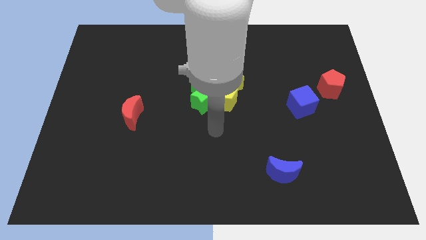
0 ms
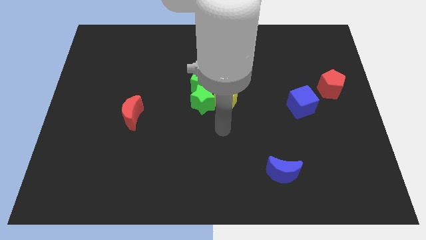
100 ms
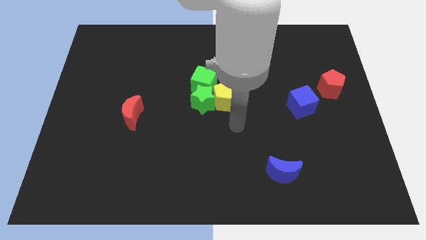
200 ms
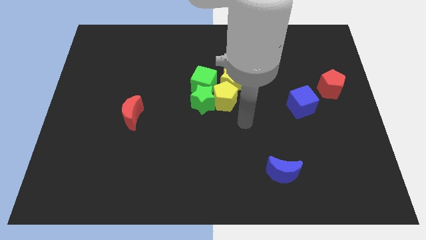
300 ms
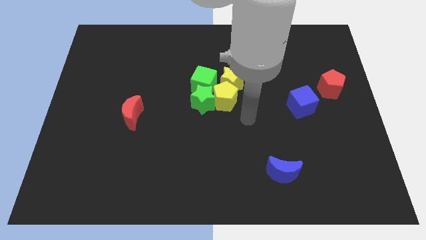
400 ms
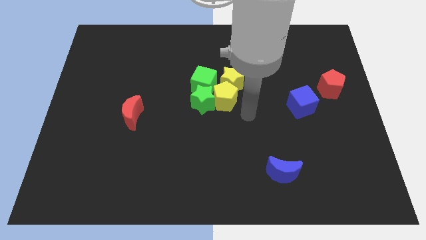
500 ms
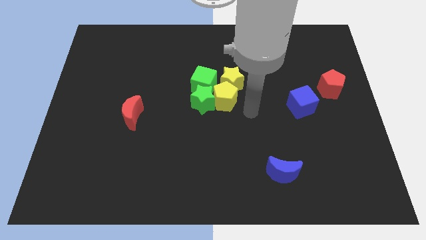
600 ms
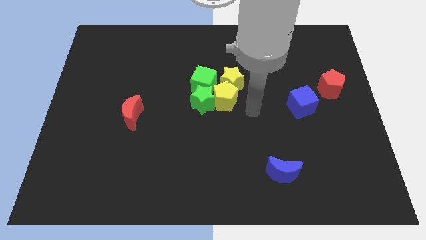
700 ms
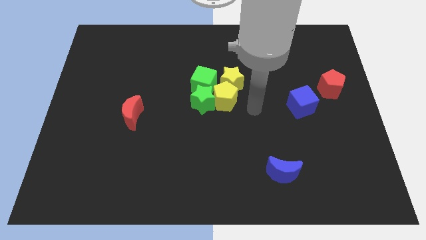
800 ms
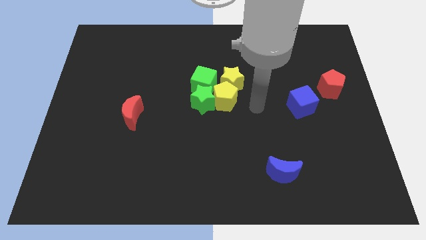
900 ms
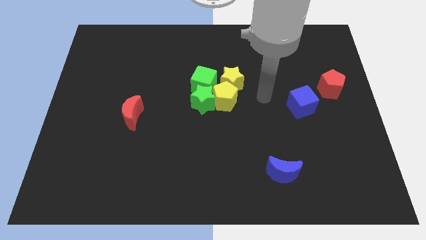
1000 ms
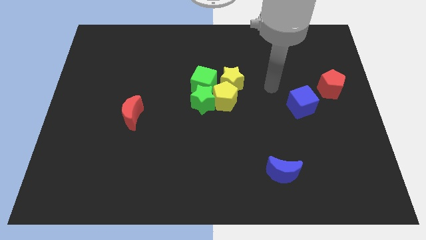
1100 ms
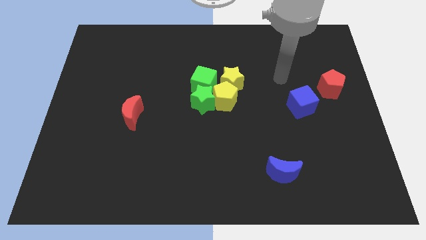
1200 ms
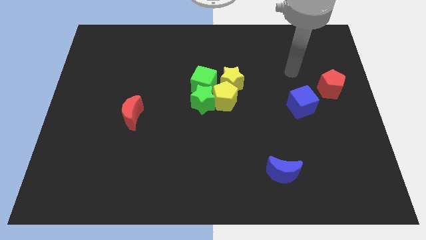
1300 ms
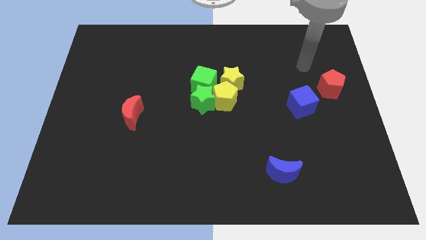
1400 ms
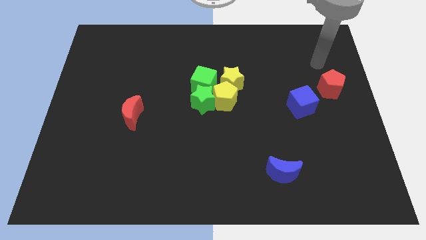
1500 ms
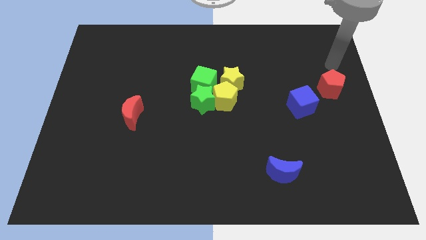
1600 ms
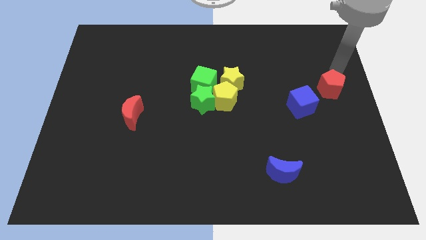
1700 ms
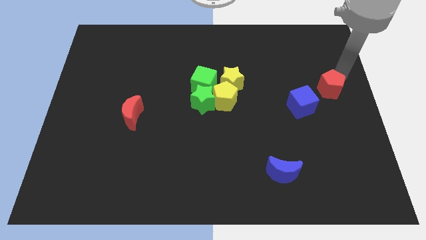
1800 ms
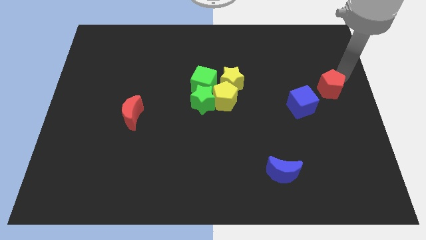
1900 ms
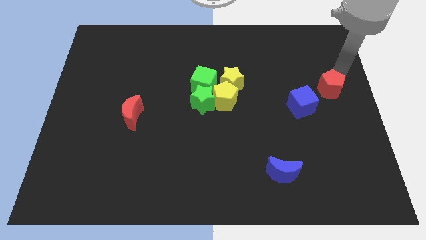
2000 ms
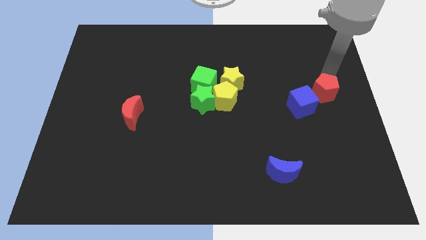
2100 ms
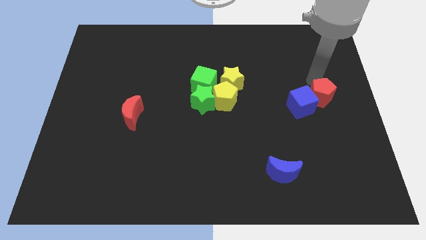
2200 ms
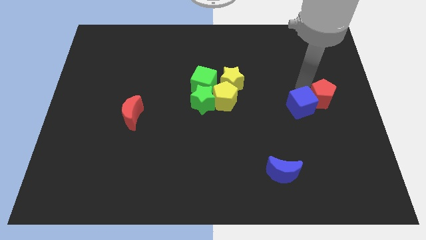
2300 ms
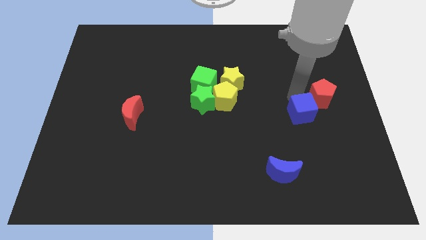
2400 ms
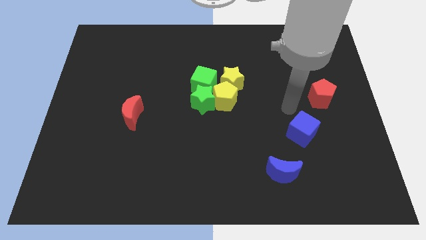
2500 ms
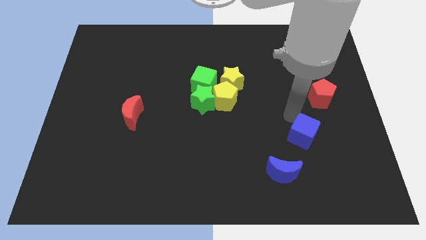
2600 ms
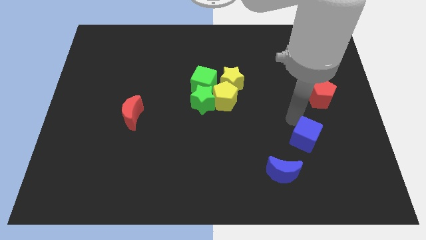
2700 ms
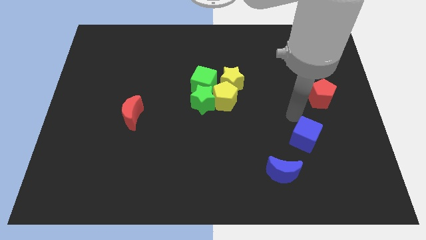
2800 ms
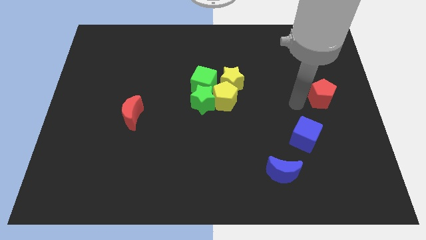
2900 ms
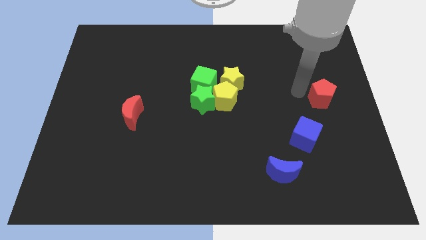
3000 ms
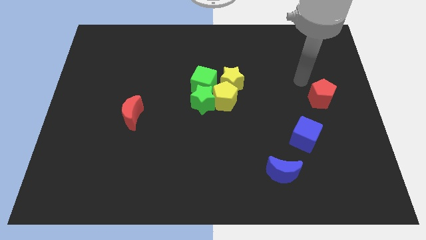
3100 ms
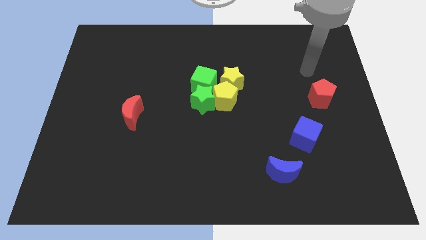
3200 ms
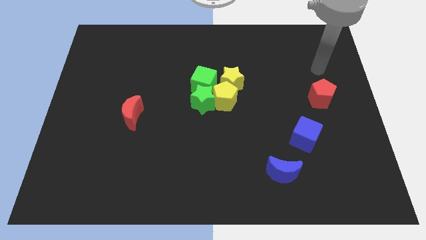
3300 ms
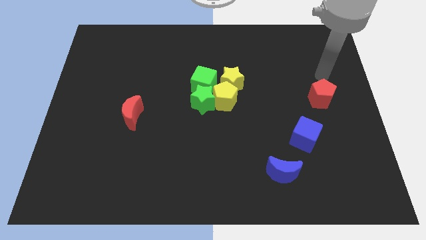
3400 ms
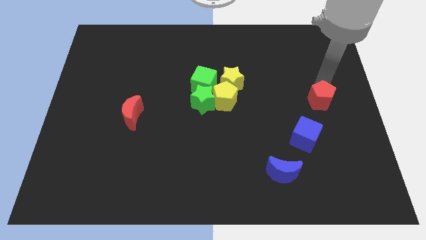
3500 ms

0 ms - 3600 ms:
drag the blue cube between the red pentagon and blue moon

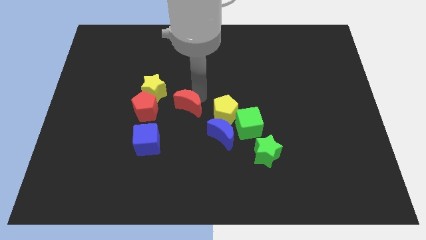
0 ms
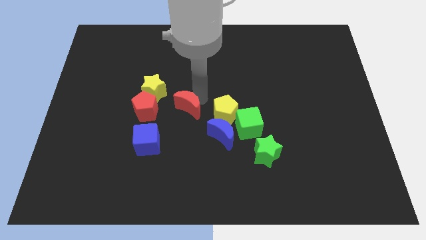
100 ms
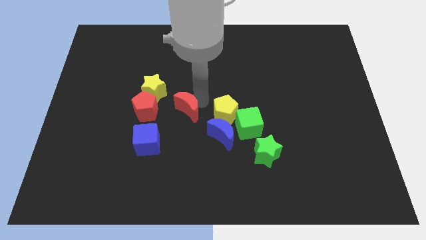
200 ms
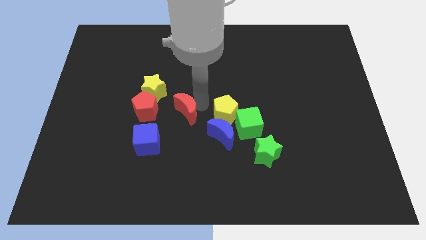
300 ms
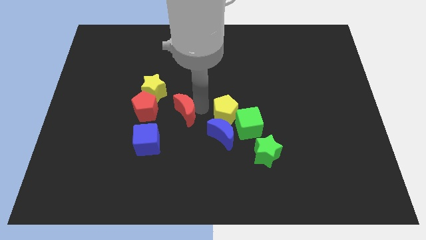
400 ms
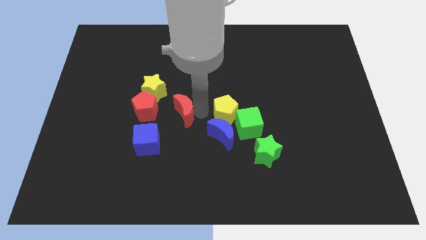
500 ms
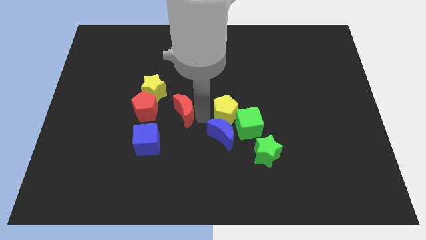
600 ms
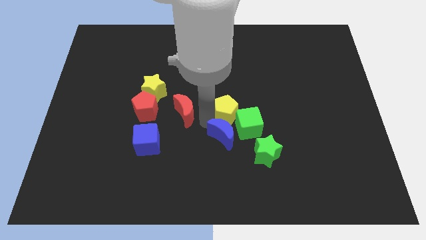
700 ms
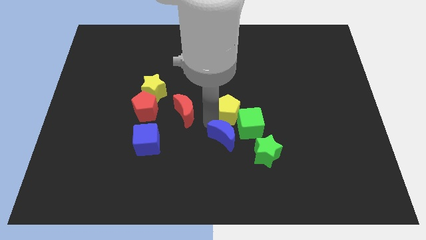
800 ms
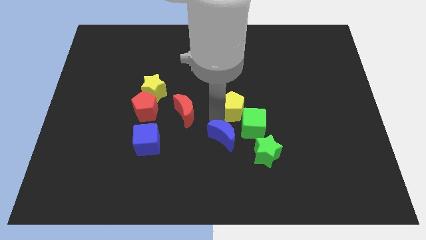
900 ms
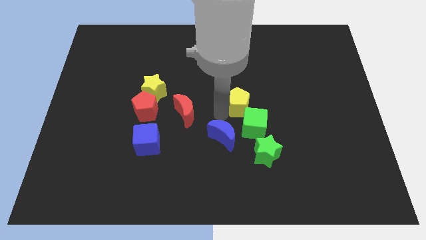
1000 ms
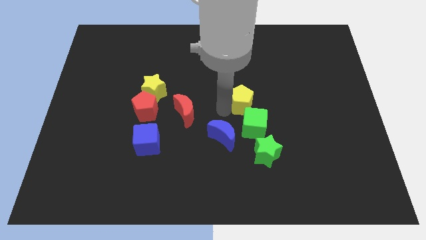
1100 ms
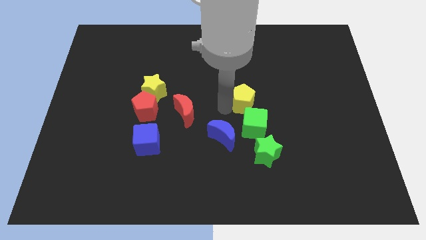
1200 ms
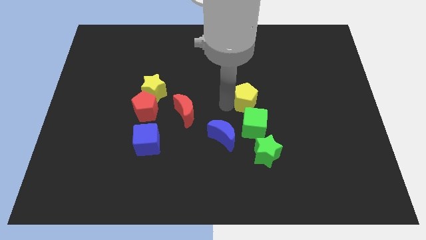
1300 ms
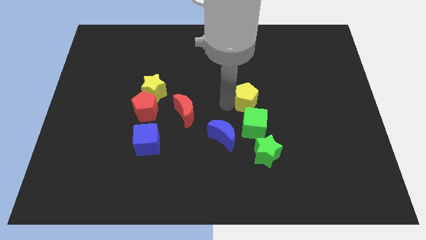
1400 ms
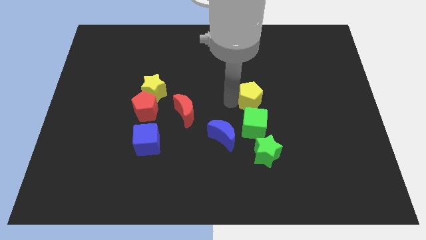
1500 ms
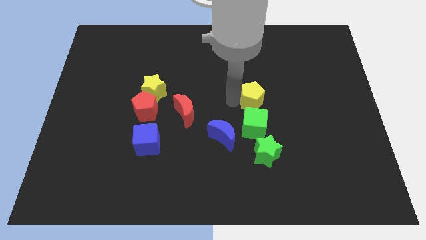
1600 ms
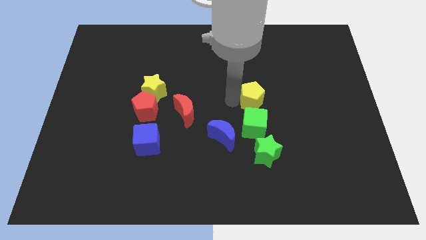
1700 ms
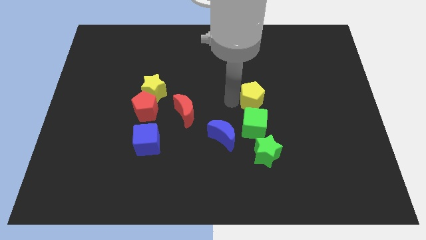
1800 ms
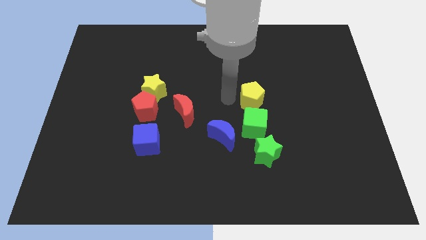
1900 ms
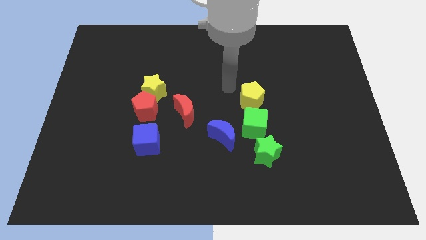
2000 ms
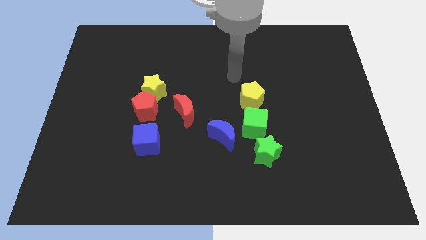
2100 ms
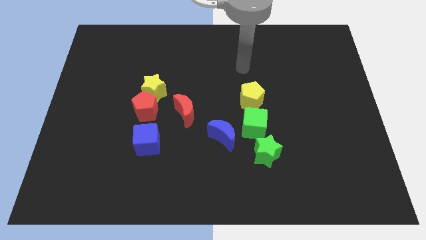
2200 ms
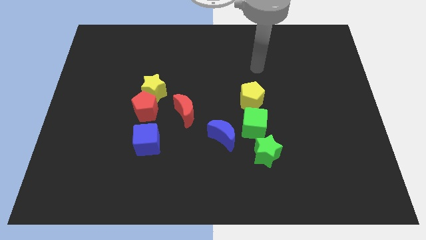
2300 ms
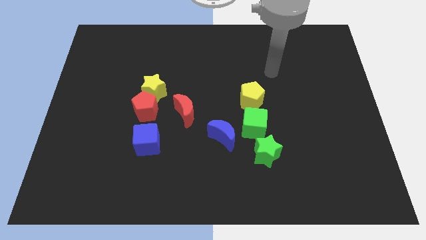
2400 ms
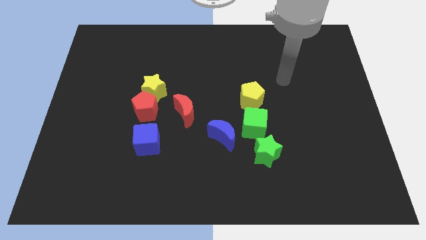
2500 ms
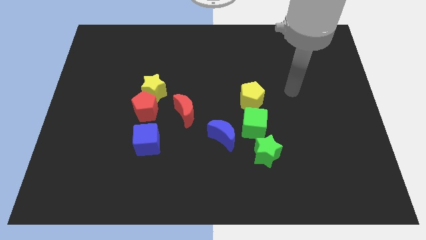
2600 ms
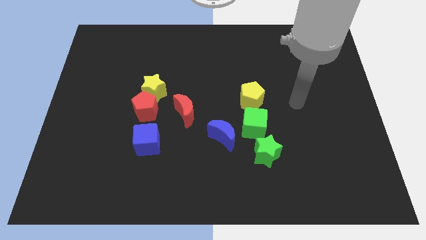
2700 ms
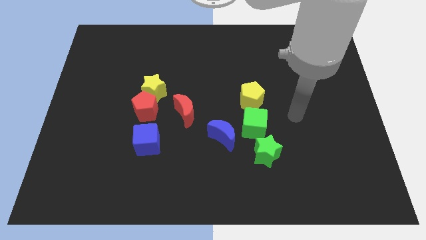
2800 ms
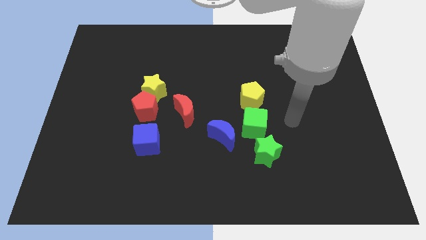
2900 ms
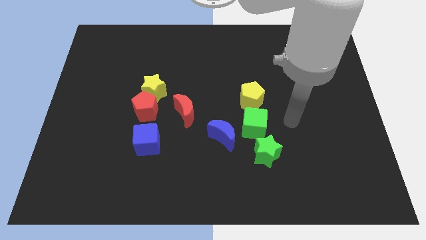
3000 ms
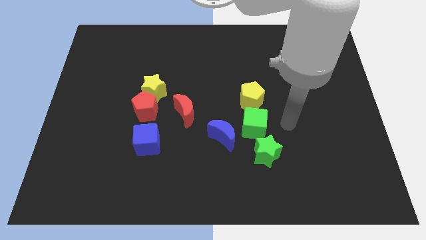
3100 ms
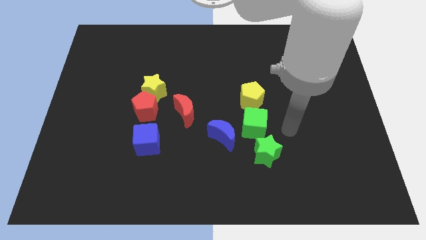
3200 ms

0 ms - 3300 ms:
move the yellow pentagon above the green cube

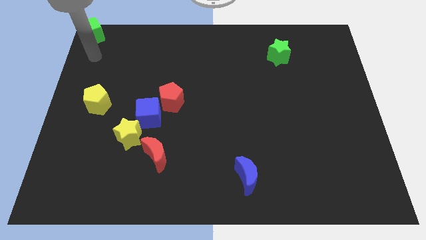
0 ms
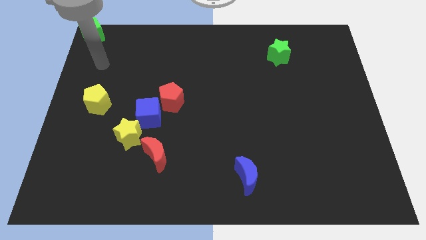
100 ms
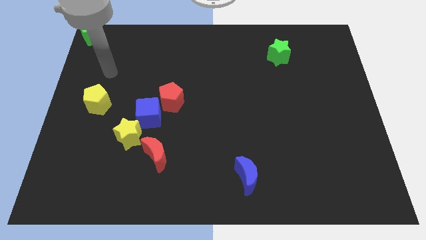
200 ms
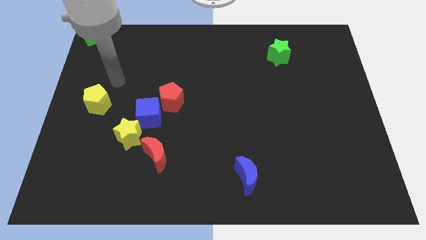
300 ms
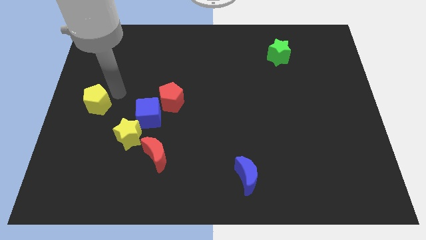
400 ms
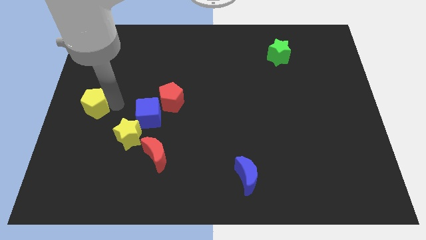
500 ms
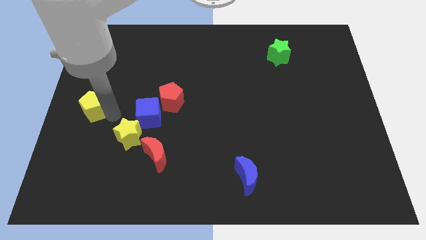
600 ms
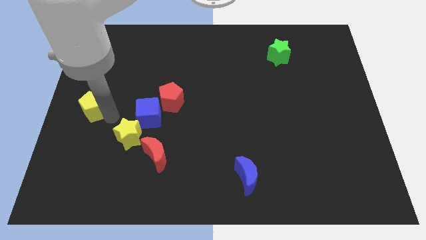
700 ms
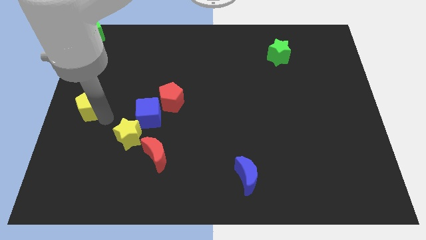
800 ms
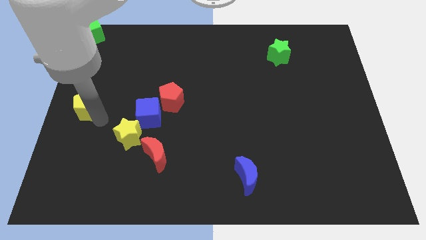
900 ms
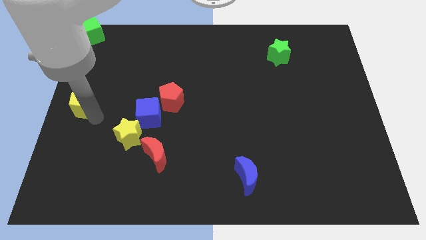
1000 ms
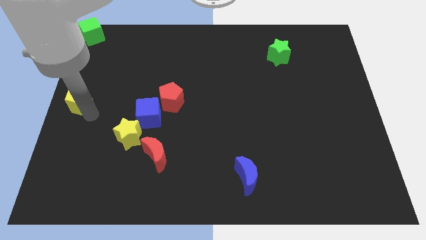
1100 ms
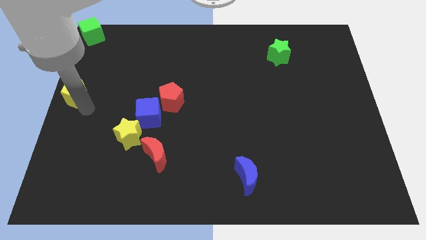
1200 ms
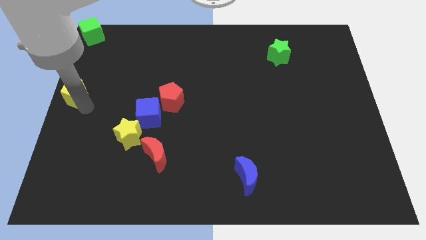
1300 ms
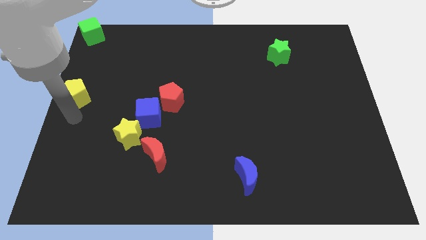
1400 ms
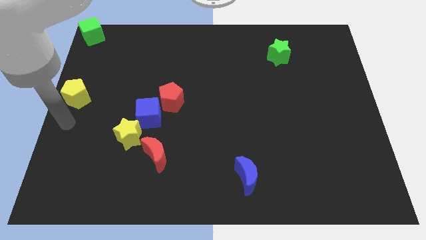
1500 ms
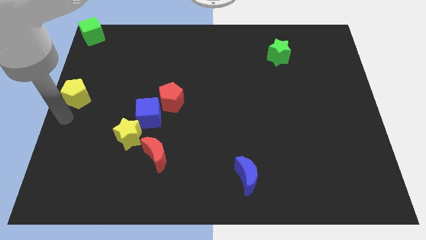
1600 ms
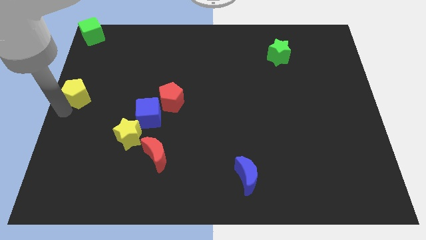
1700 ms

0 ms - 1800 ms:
move the yellow pentagon to the center left

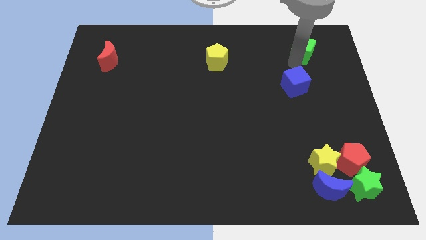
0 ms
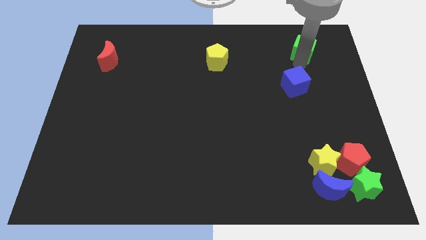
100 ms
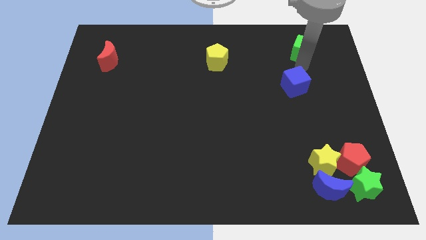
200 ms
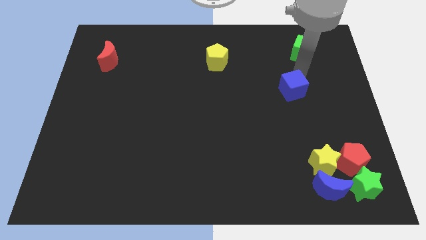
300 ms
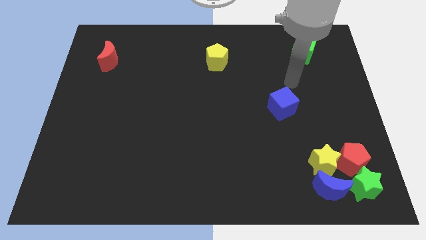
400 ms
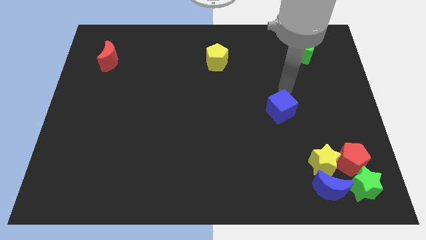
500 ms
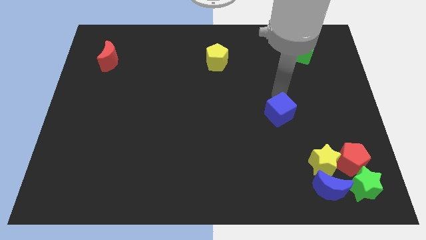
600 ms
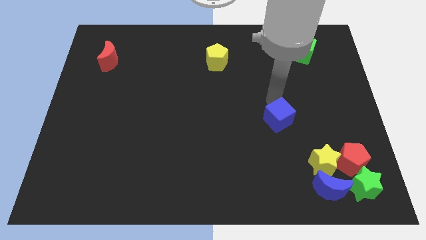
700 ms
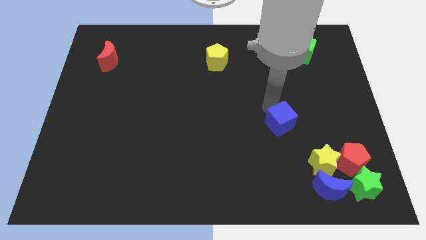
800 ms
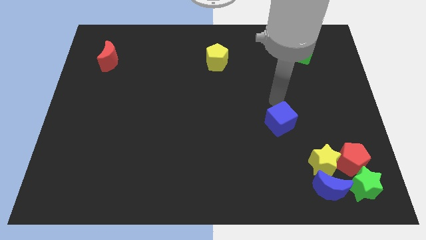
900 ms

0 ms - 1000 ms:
move the blue cube slightly down
